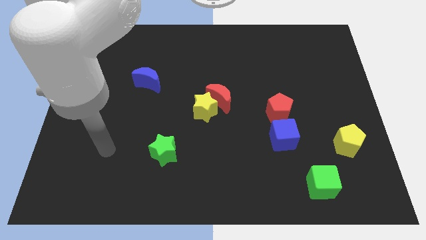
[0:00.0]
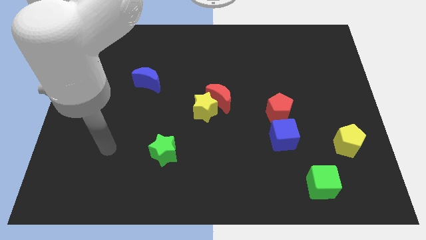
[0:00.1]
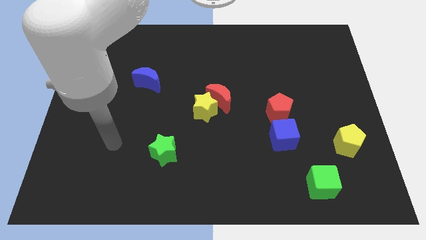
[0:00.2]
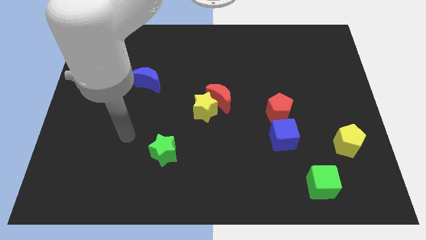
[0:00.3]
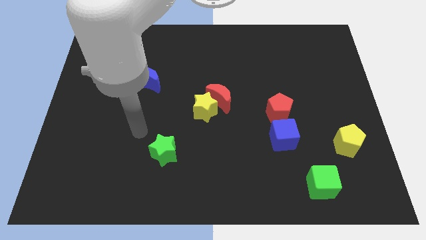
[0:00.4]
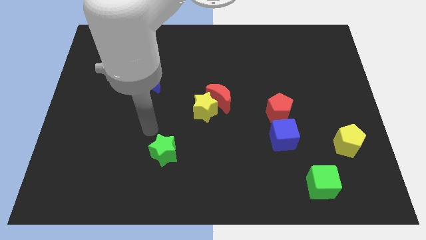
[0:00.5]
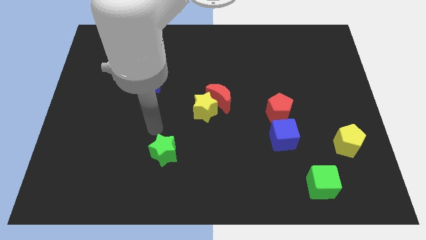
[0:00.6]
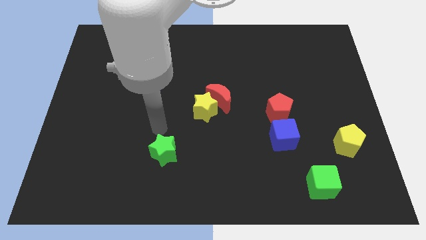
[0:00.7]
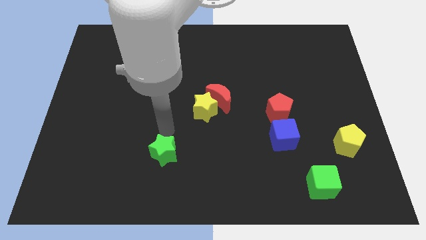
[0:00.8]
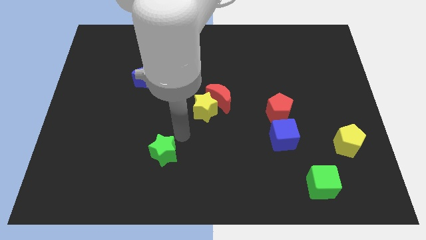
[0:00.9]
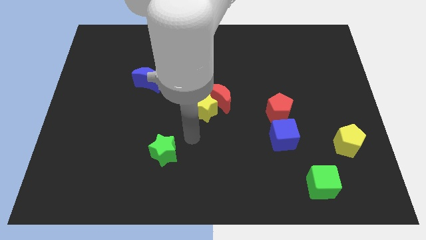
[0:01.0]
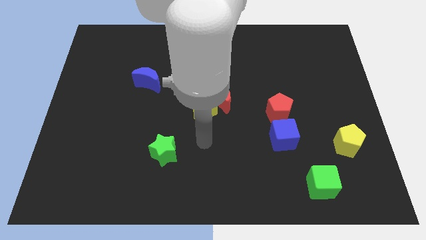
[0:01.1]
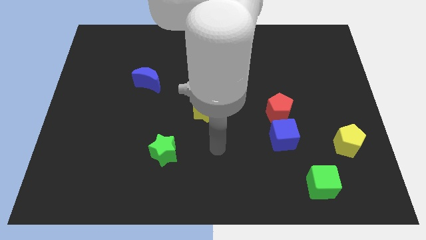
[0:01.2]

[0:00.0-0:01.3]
point your arm in between the blue cube and green star

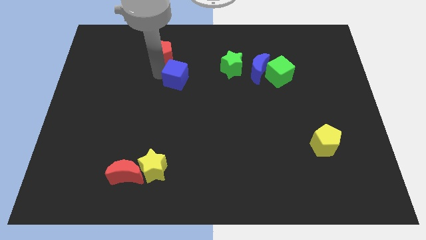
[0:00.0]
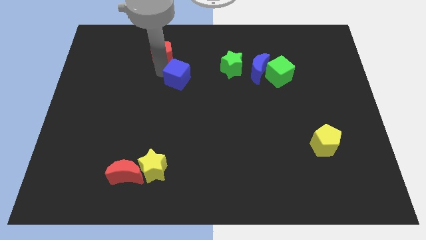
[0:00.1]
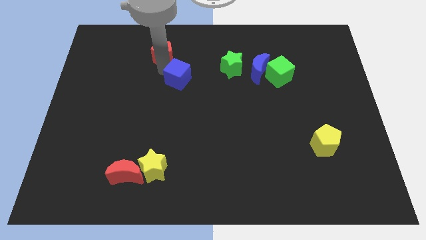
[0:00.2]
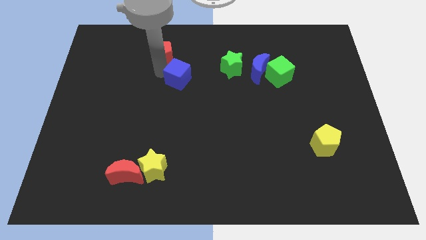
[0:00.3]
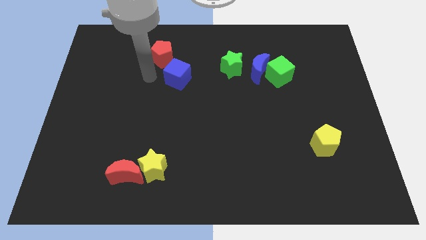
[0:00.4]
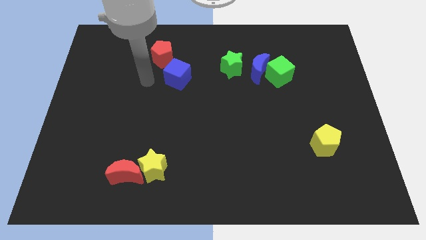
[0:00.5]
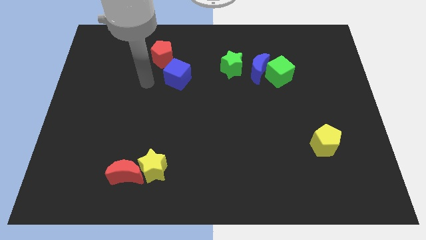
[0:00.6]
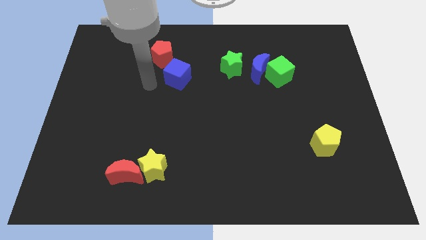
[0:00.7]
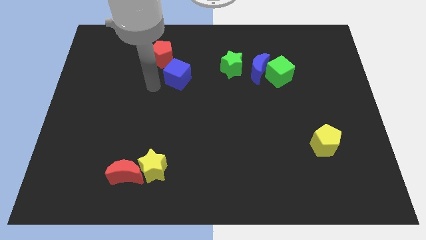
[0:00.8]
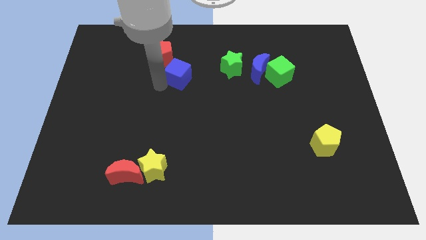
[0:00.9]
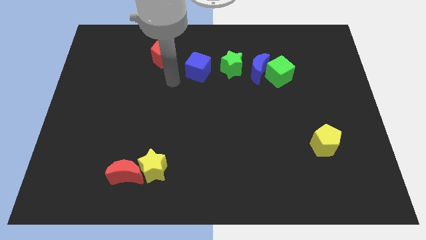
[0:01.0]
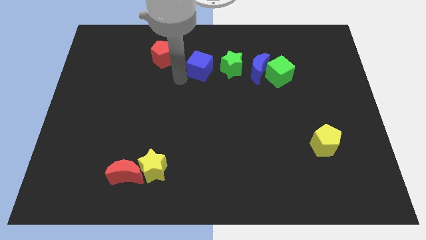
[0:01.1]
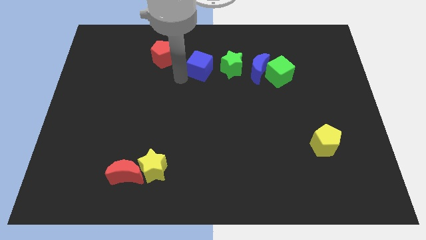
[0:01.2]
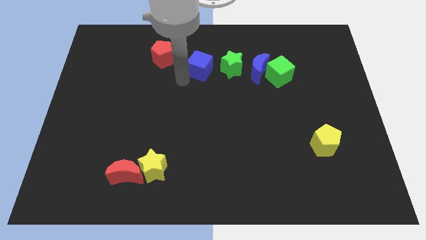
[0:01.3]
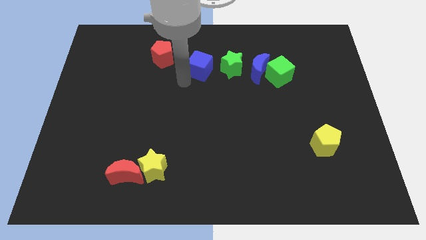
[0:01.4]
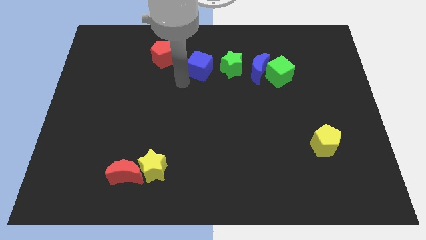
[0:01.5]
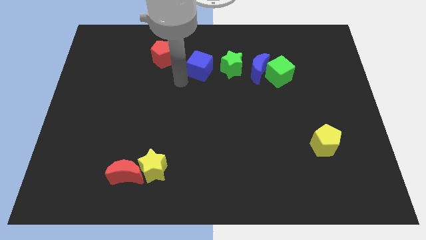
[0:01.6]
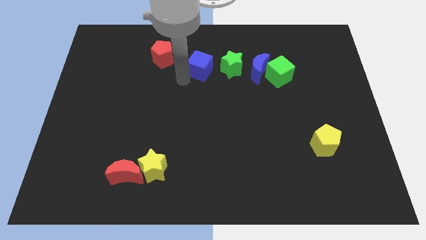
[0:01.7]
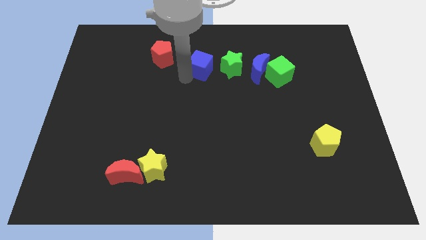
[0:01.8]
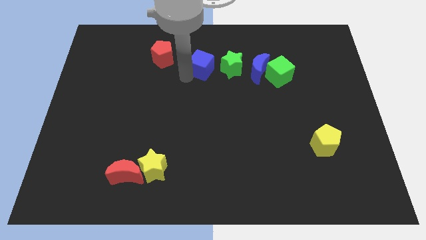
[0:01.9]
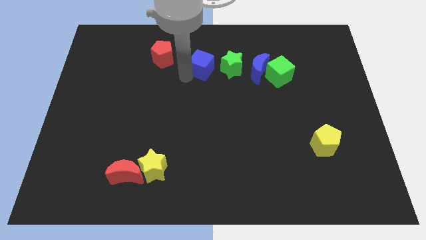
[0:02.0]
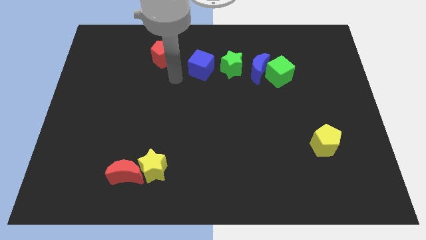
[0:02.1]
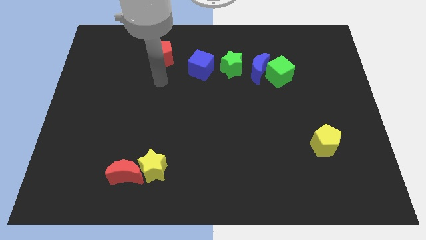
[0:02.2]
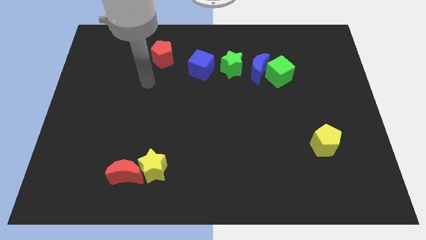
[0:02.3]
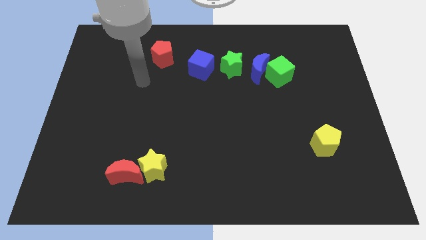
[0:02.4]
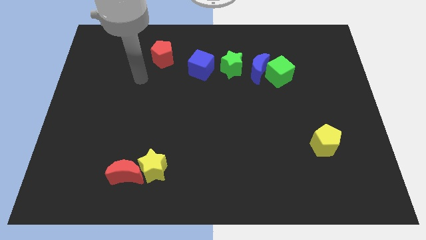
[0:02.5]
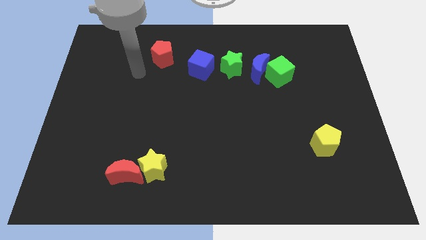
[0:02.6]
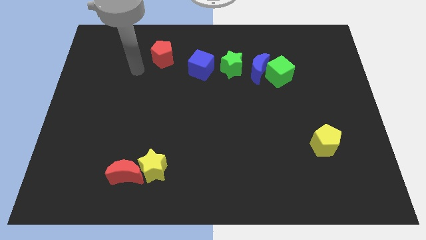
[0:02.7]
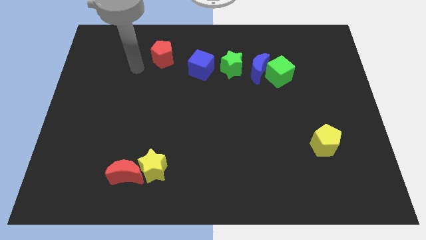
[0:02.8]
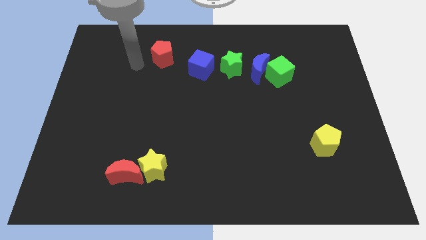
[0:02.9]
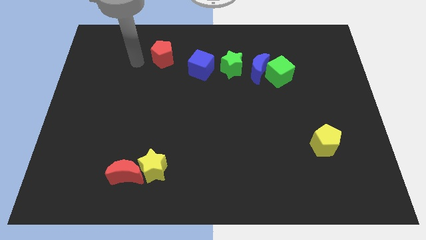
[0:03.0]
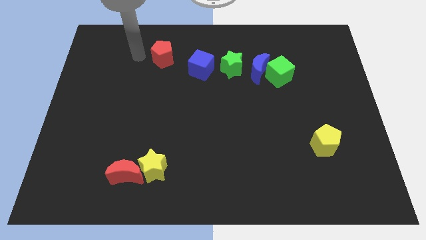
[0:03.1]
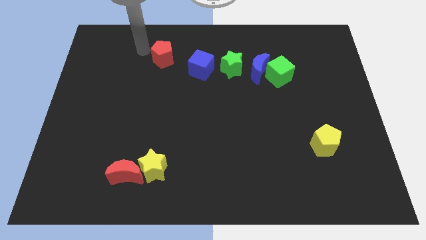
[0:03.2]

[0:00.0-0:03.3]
place the blue cube to the left side of the green star

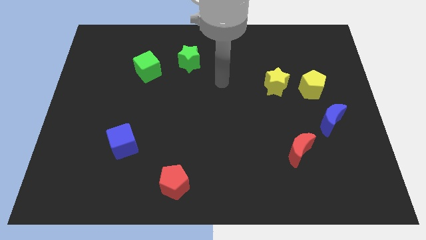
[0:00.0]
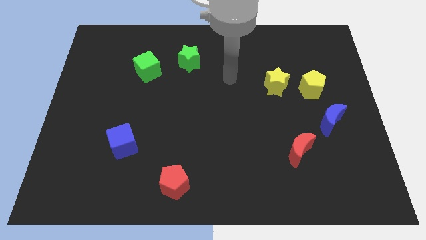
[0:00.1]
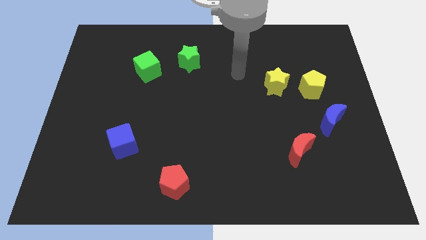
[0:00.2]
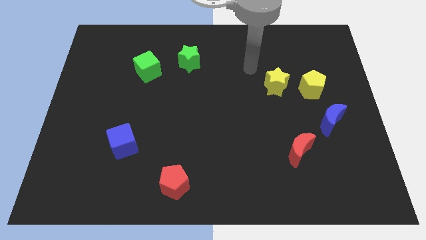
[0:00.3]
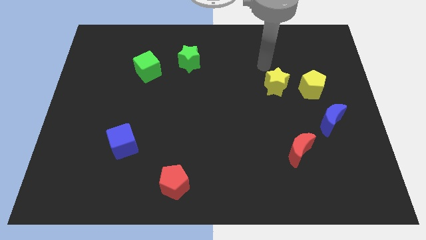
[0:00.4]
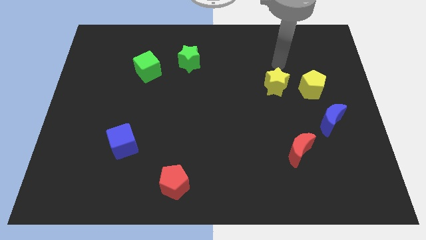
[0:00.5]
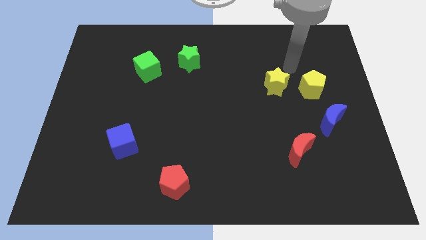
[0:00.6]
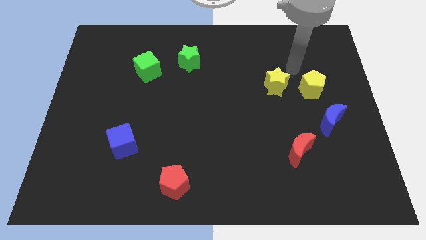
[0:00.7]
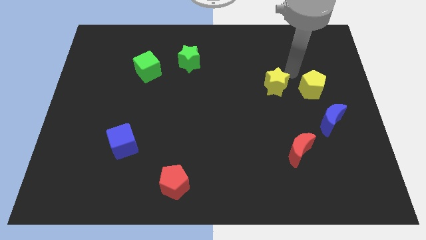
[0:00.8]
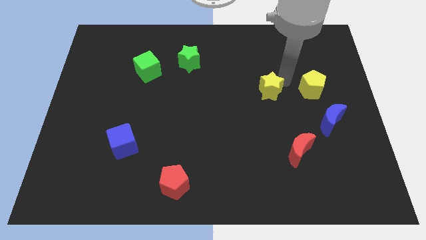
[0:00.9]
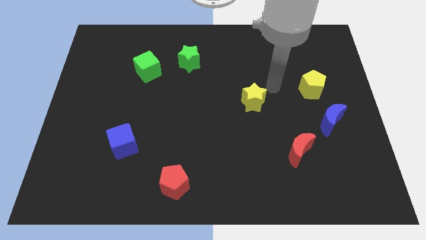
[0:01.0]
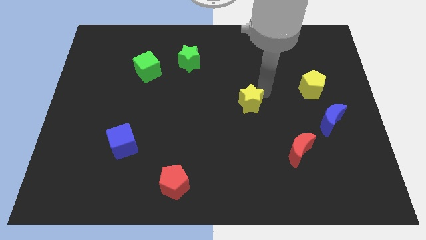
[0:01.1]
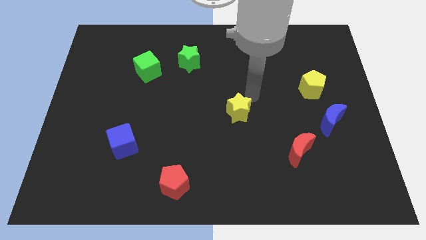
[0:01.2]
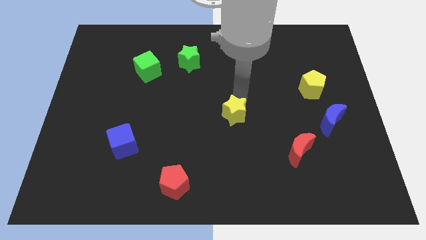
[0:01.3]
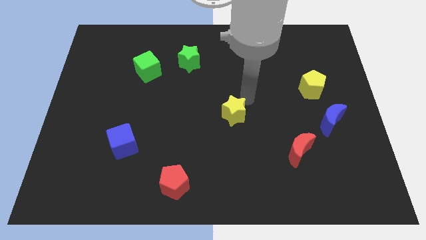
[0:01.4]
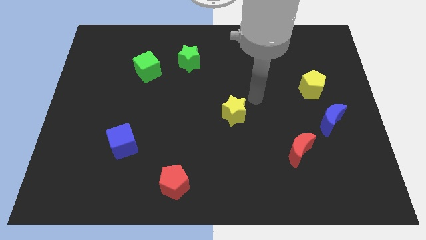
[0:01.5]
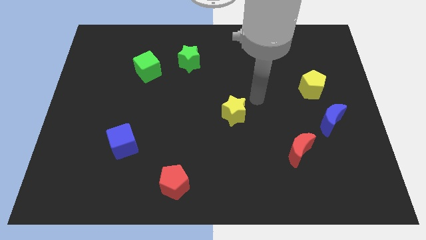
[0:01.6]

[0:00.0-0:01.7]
place the yellow star diagonally in between the green star and the red crescent

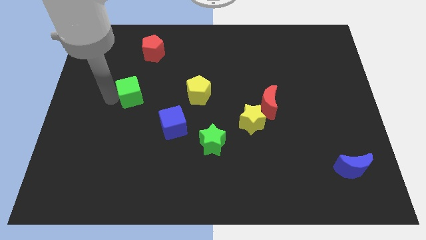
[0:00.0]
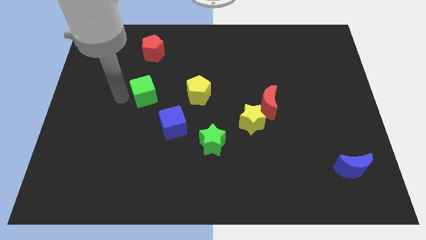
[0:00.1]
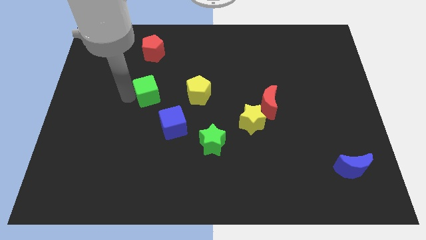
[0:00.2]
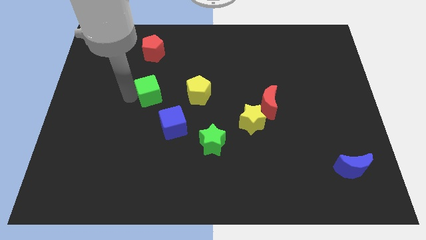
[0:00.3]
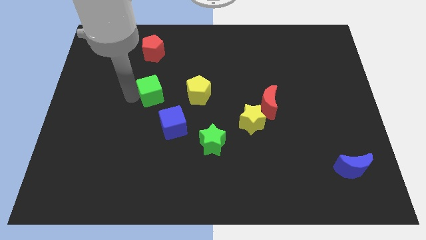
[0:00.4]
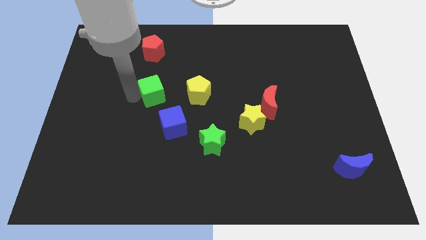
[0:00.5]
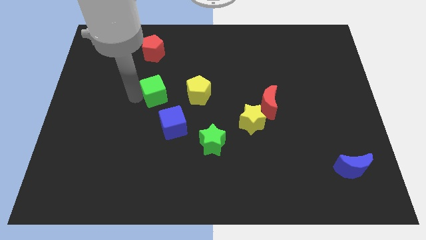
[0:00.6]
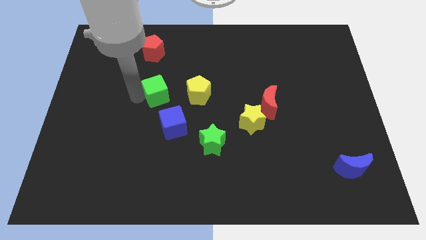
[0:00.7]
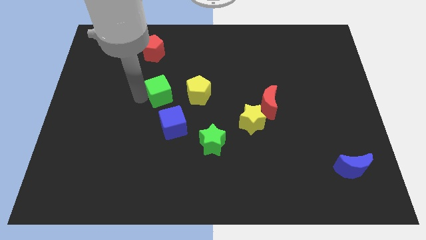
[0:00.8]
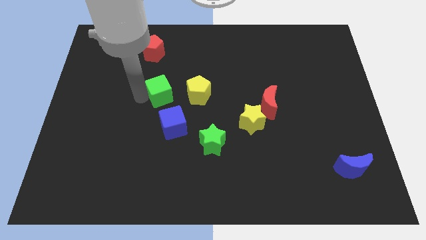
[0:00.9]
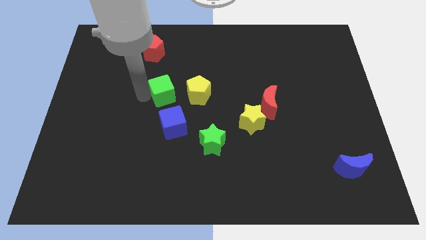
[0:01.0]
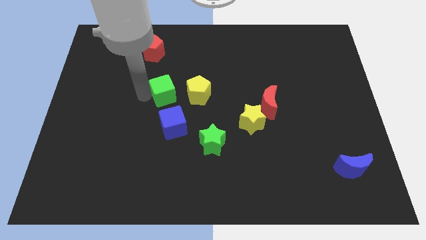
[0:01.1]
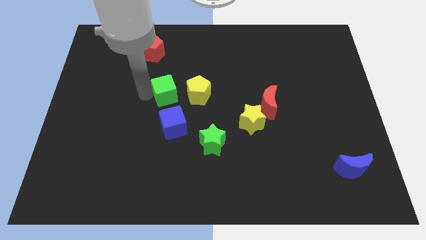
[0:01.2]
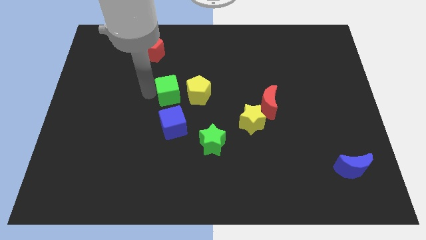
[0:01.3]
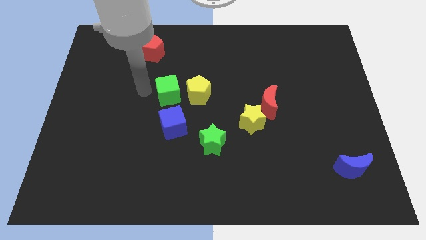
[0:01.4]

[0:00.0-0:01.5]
push the green cube close to the yellow pentagon

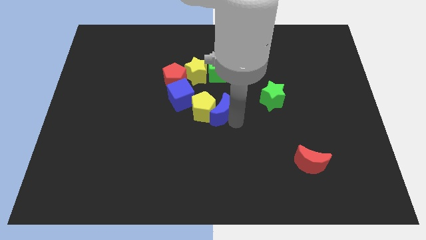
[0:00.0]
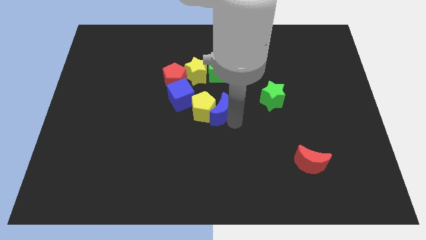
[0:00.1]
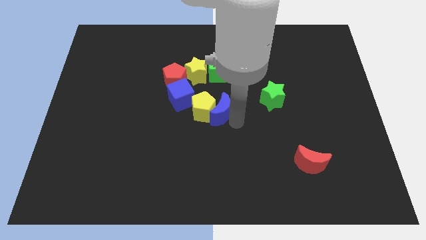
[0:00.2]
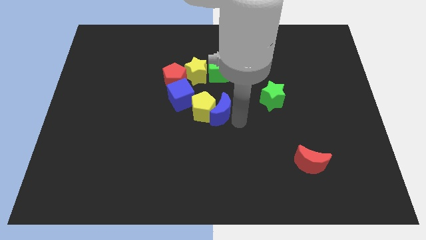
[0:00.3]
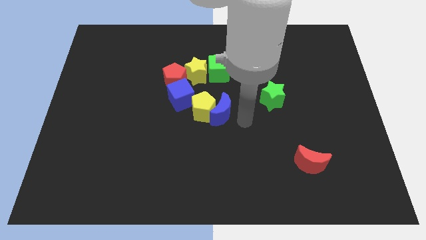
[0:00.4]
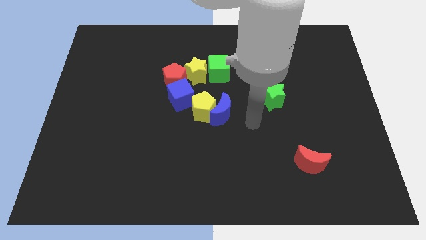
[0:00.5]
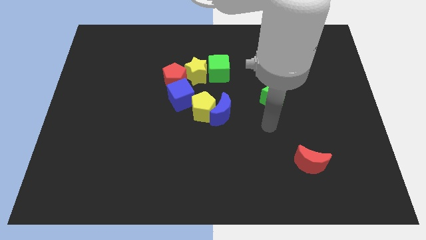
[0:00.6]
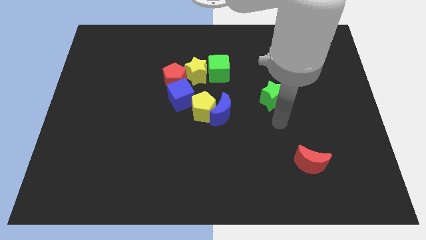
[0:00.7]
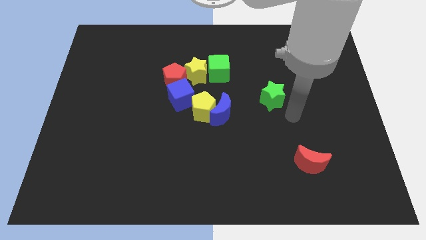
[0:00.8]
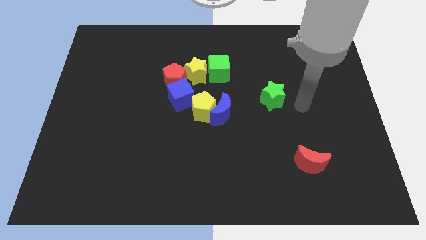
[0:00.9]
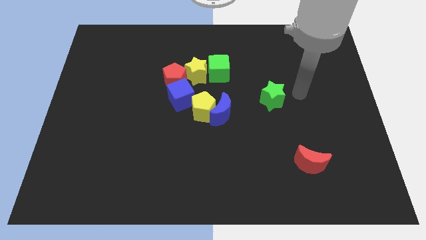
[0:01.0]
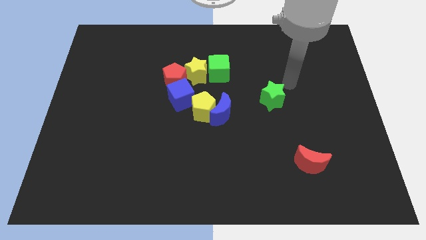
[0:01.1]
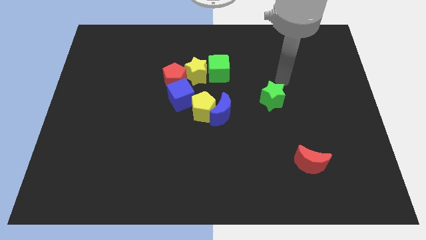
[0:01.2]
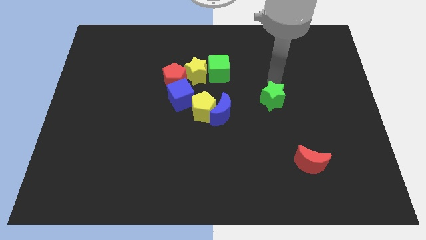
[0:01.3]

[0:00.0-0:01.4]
point your hand above the green star

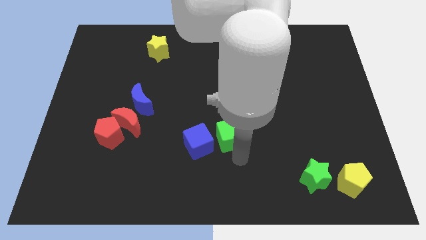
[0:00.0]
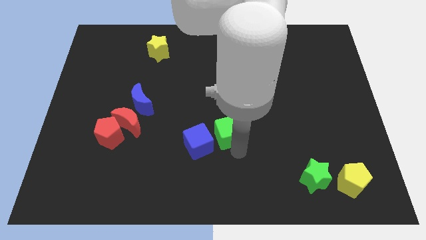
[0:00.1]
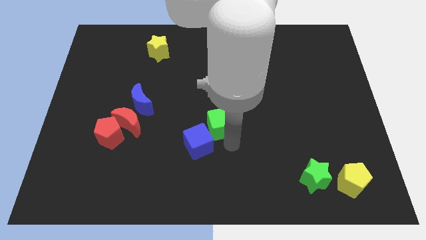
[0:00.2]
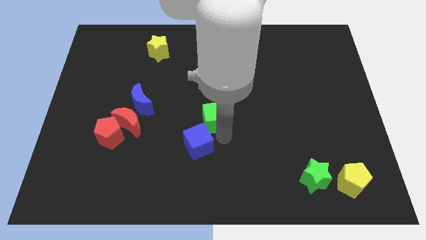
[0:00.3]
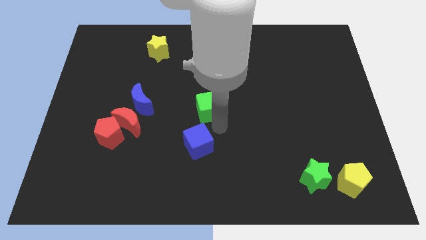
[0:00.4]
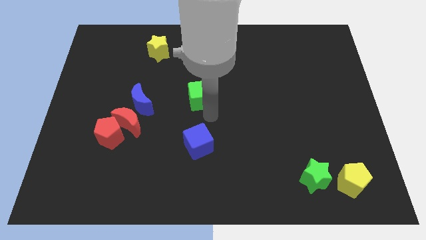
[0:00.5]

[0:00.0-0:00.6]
place green cube at center
